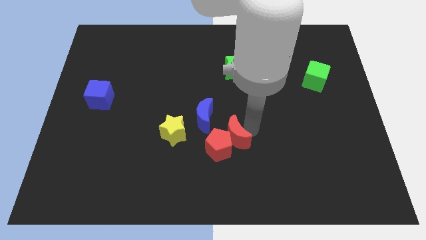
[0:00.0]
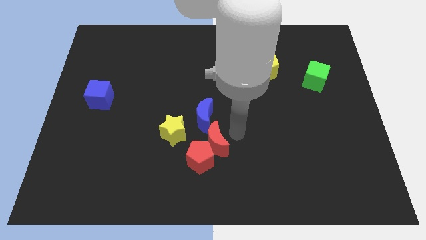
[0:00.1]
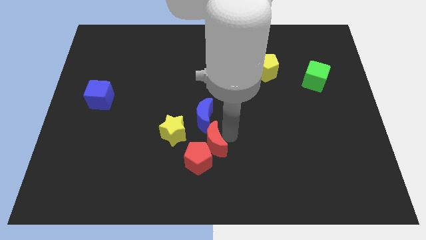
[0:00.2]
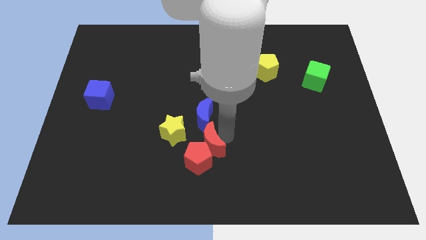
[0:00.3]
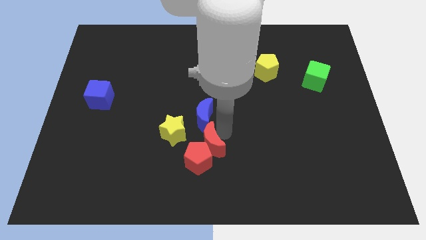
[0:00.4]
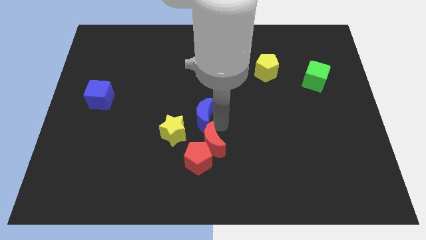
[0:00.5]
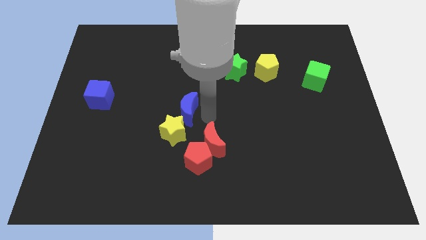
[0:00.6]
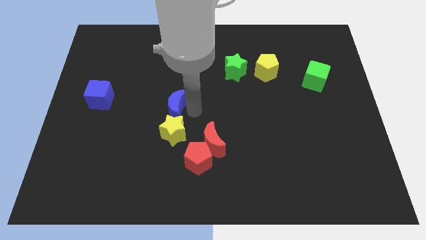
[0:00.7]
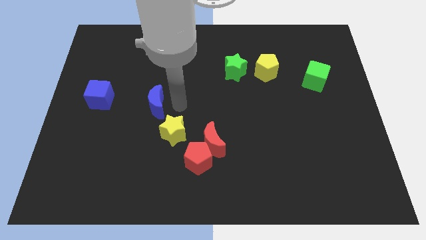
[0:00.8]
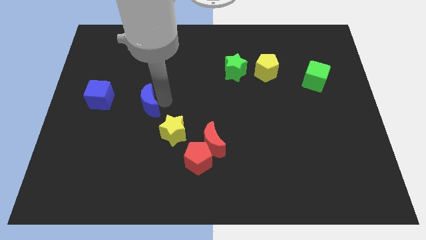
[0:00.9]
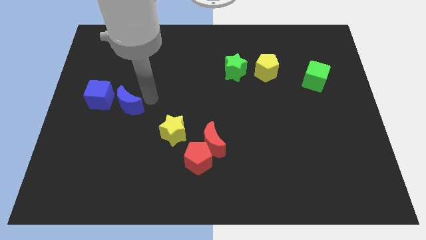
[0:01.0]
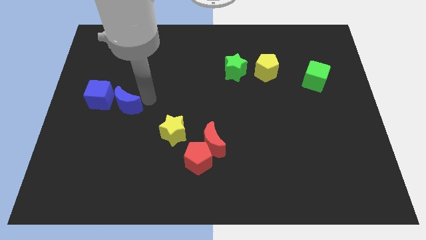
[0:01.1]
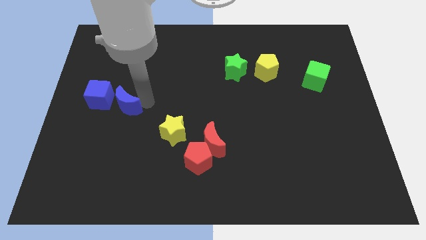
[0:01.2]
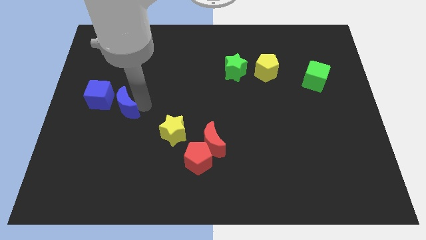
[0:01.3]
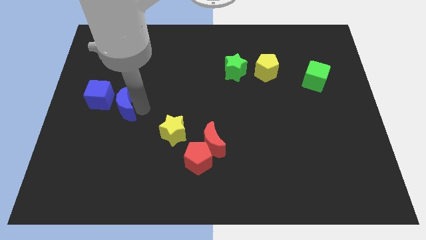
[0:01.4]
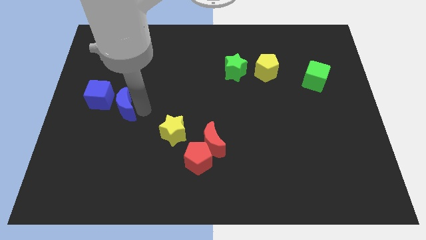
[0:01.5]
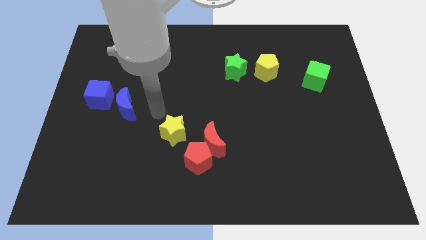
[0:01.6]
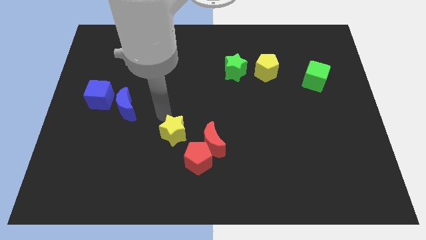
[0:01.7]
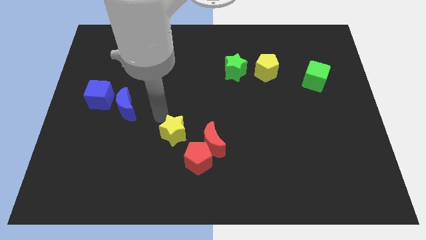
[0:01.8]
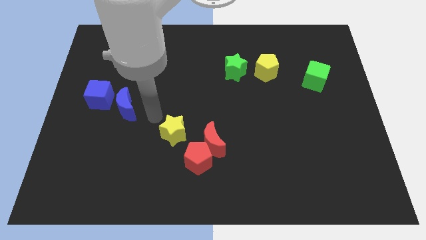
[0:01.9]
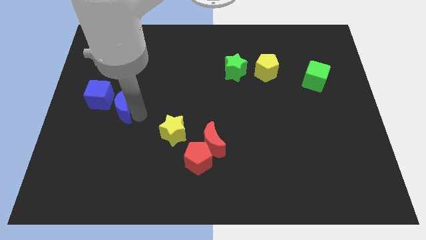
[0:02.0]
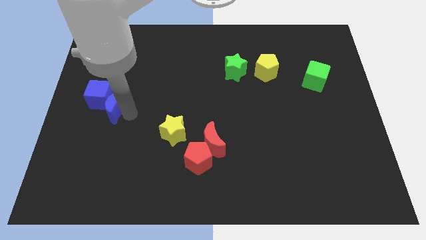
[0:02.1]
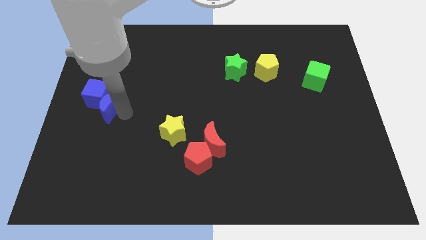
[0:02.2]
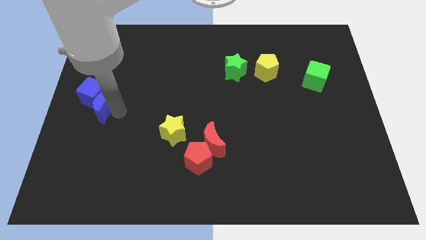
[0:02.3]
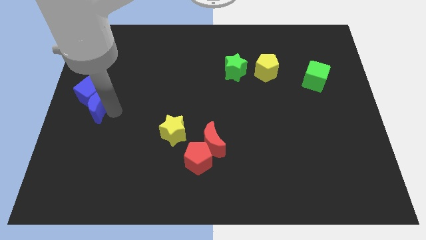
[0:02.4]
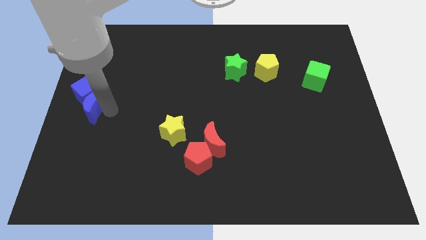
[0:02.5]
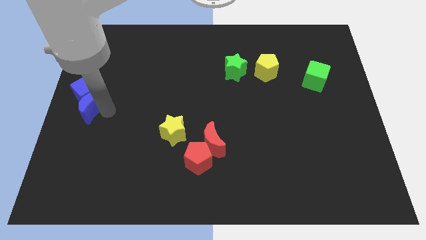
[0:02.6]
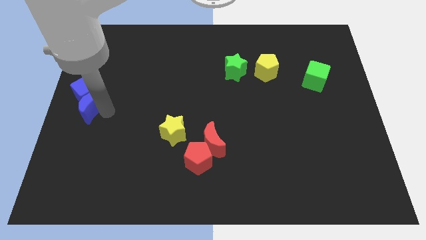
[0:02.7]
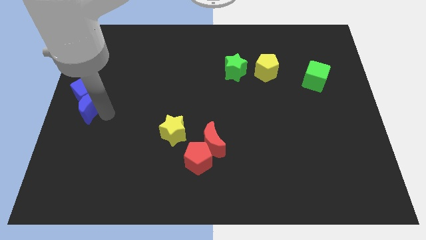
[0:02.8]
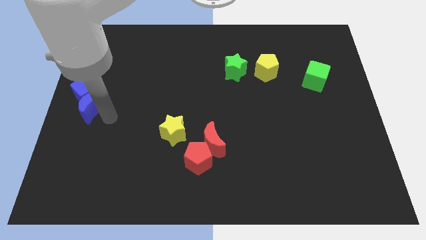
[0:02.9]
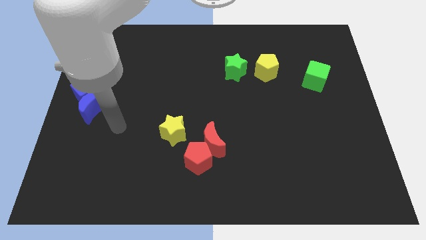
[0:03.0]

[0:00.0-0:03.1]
place the blue moon into the blue cube

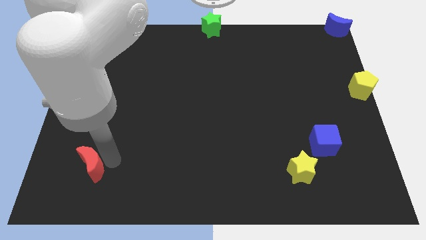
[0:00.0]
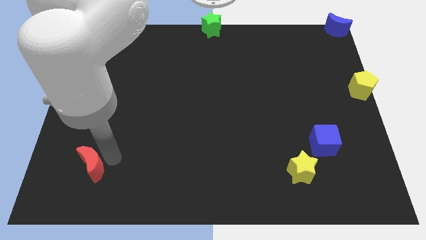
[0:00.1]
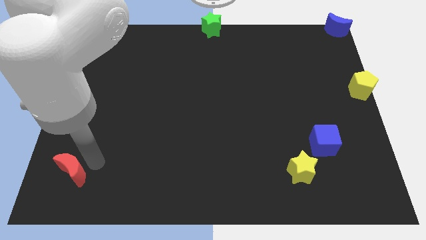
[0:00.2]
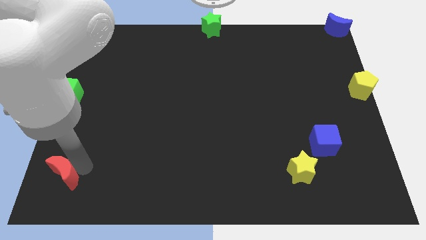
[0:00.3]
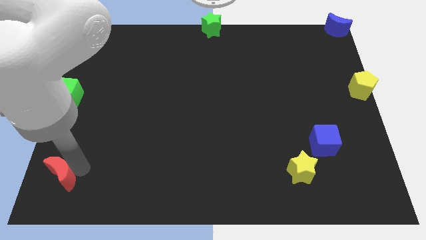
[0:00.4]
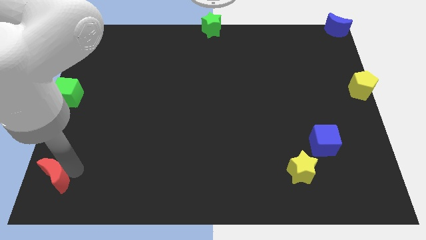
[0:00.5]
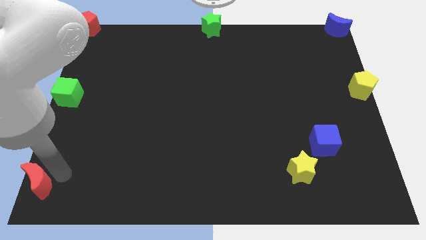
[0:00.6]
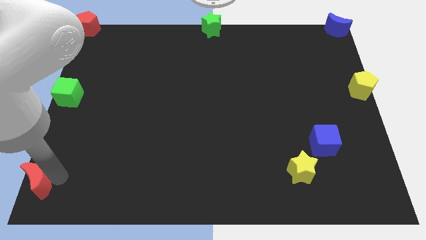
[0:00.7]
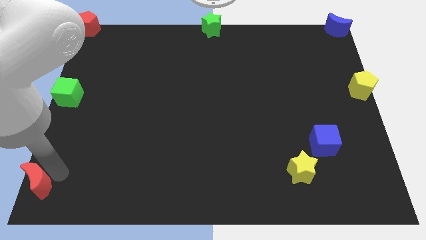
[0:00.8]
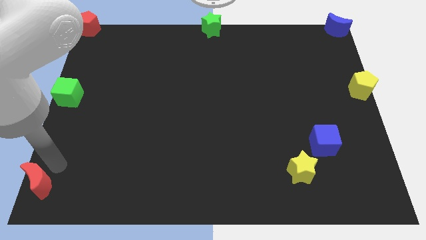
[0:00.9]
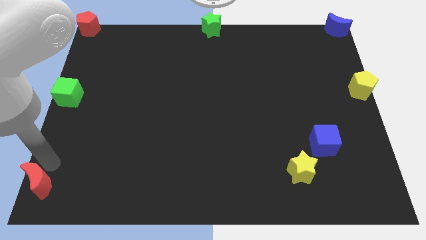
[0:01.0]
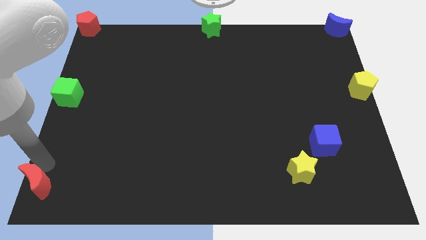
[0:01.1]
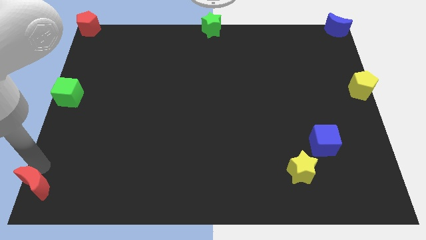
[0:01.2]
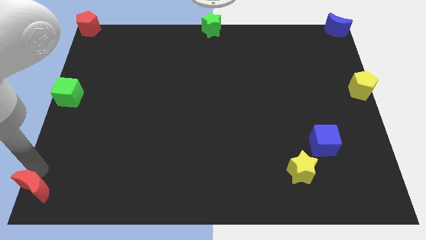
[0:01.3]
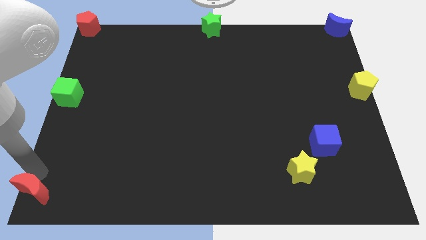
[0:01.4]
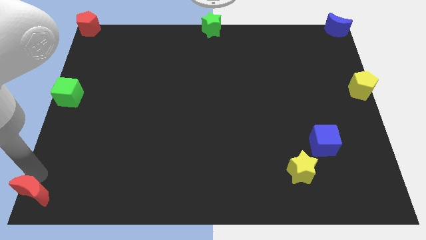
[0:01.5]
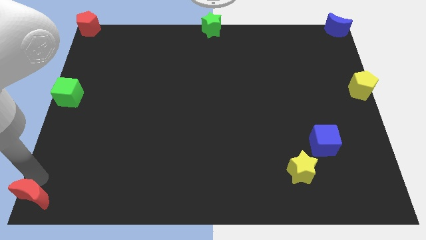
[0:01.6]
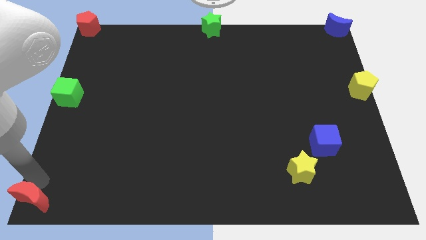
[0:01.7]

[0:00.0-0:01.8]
drag the red moon to the bottom left corner

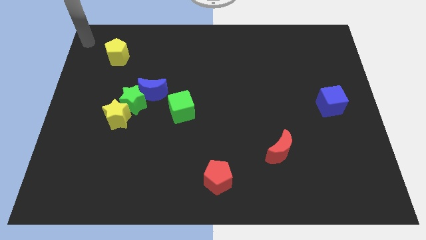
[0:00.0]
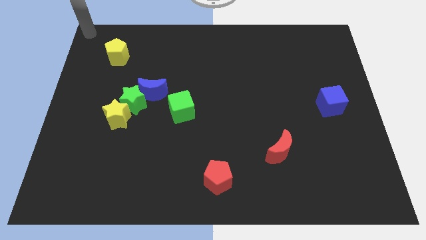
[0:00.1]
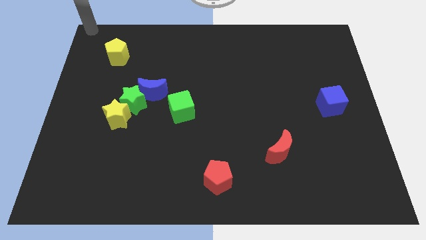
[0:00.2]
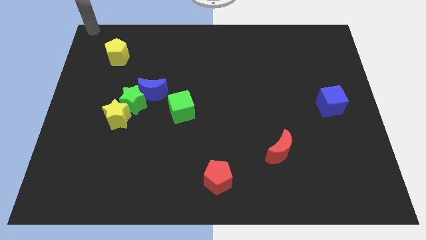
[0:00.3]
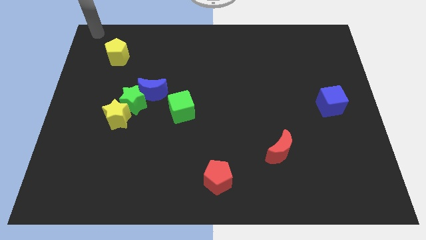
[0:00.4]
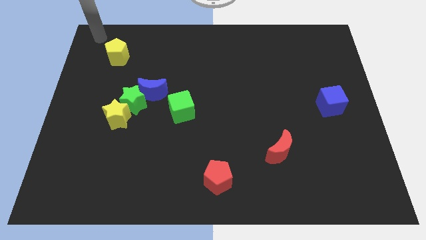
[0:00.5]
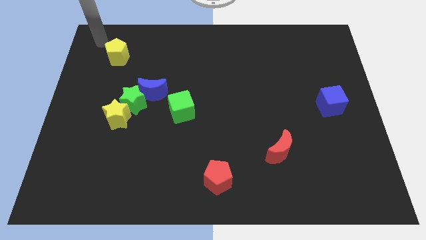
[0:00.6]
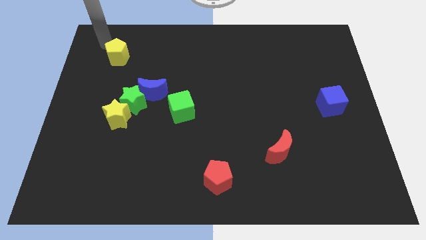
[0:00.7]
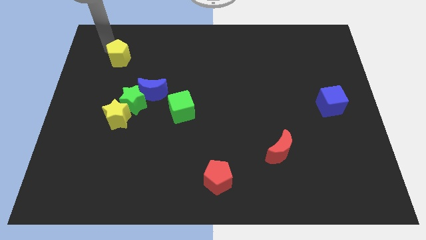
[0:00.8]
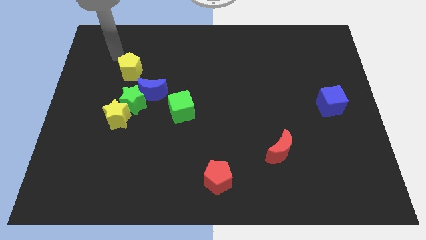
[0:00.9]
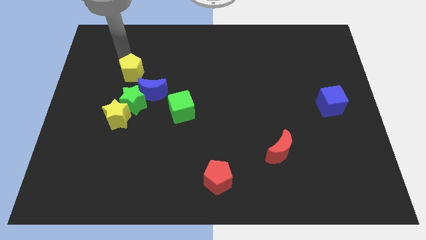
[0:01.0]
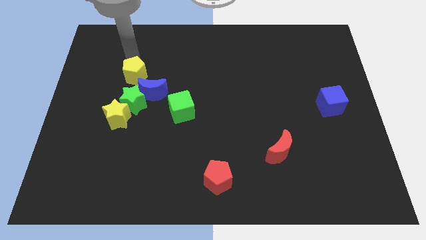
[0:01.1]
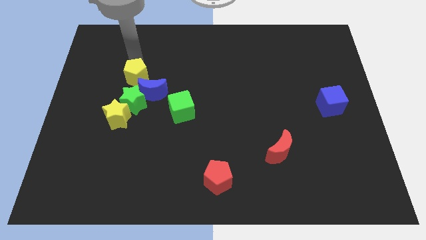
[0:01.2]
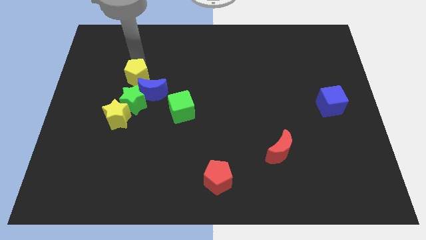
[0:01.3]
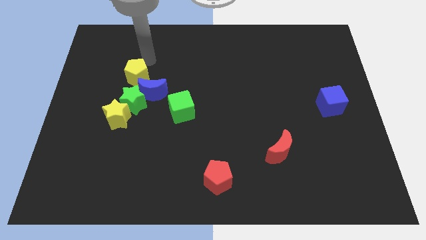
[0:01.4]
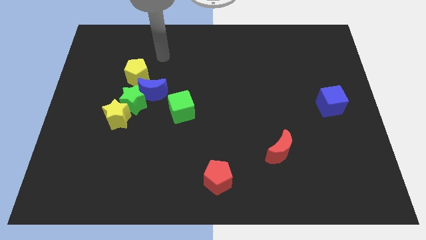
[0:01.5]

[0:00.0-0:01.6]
push the yellow pentagon to the top of the green star

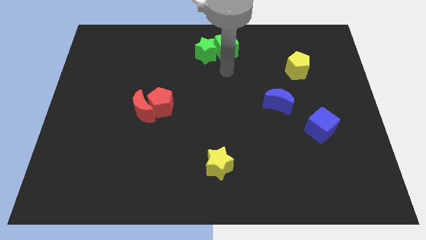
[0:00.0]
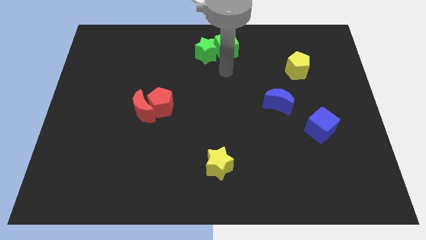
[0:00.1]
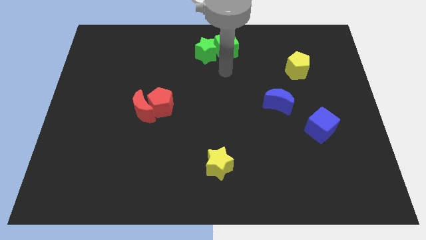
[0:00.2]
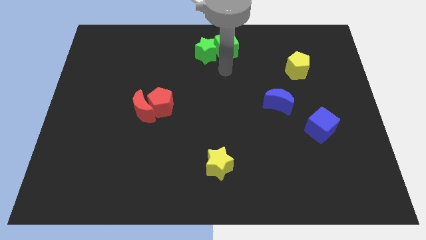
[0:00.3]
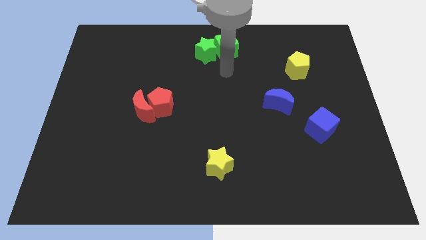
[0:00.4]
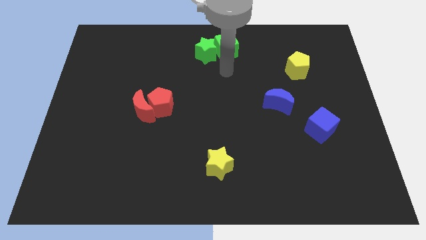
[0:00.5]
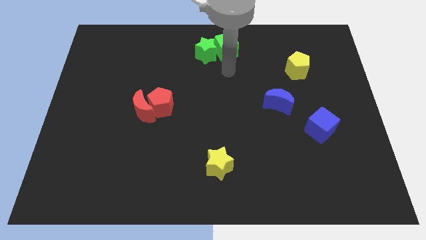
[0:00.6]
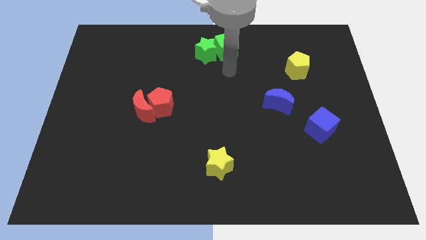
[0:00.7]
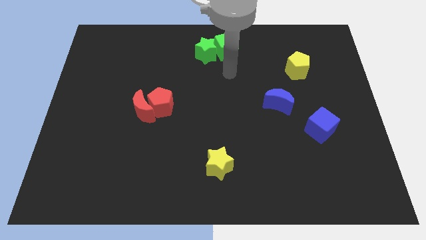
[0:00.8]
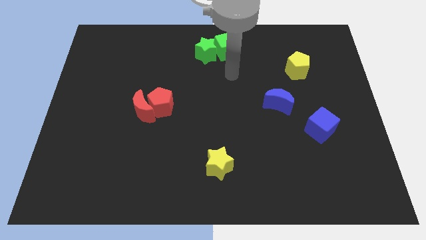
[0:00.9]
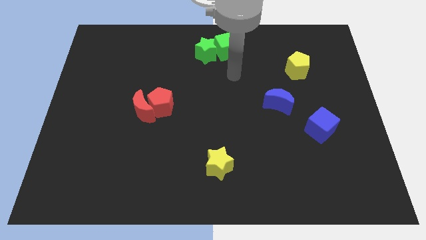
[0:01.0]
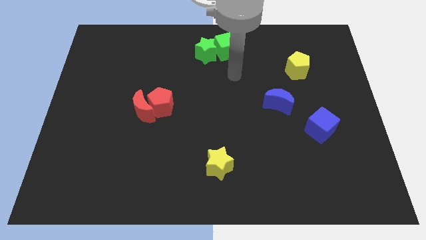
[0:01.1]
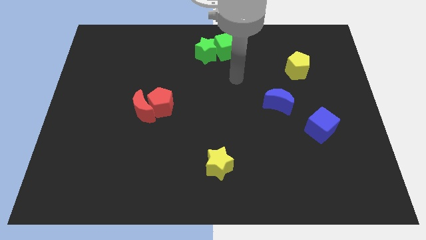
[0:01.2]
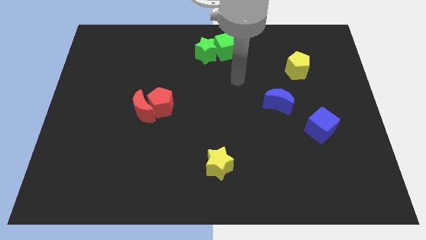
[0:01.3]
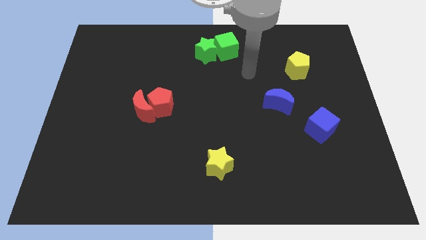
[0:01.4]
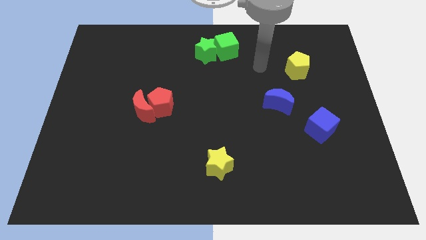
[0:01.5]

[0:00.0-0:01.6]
move away from the green cube

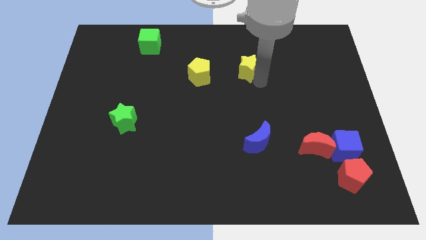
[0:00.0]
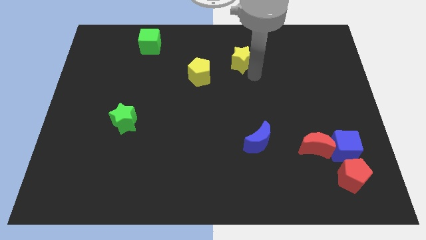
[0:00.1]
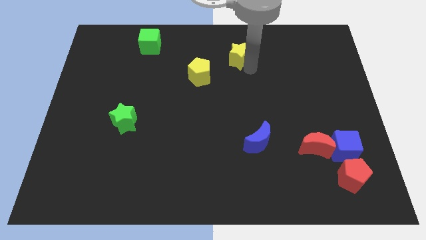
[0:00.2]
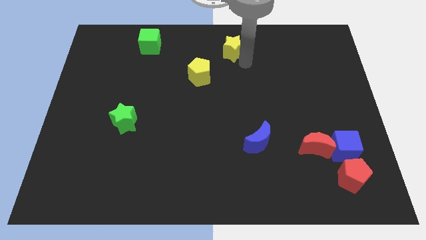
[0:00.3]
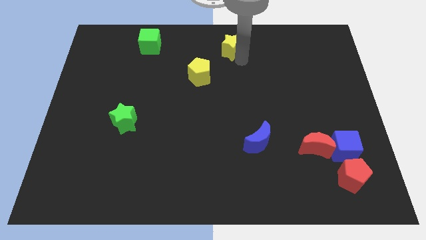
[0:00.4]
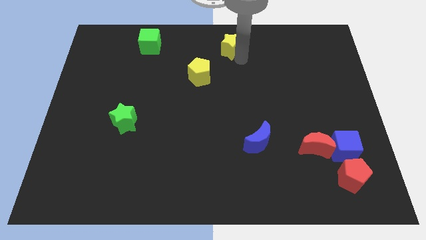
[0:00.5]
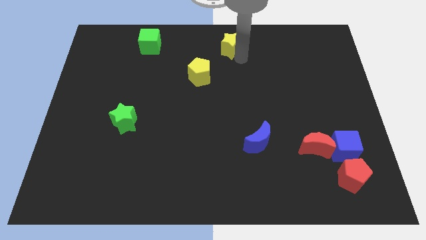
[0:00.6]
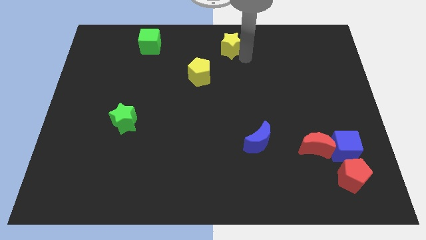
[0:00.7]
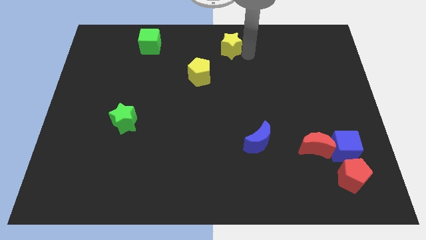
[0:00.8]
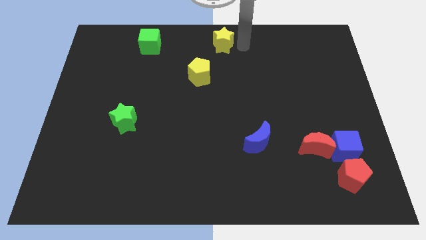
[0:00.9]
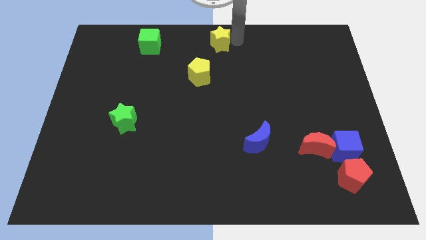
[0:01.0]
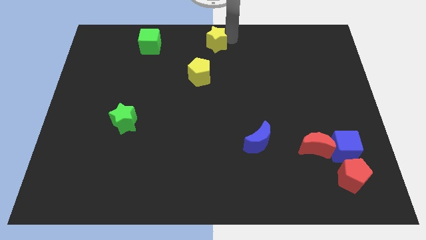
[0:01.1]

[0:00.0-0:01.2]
place the yellow star right to the green cube
